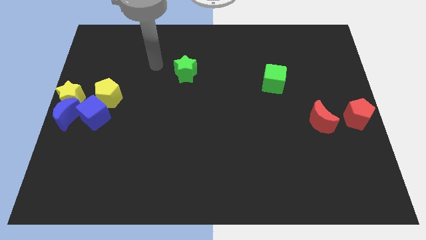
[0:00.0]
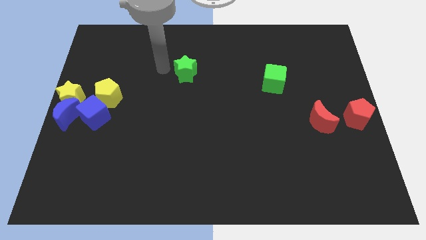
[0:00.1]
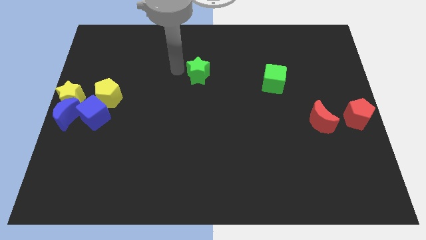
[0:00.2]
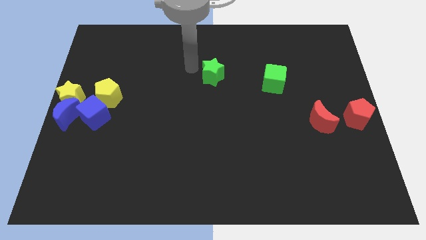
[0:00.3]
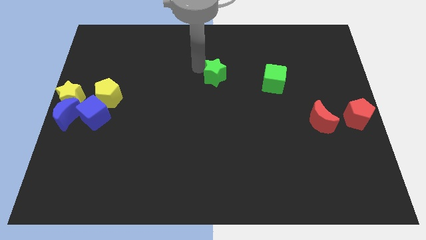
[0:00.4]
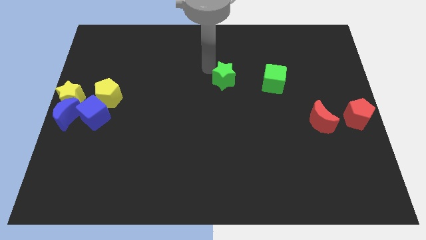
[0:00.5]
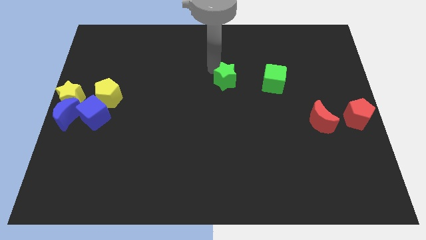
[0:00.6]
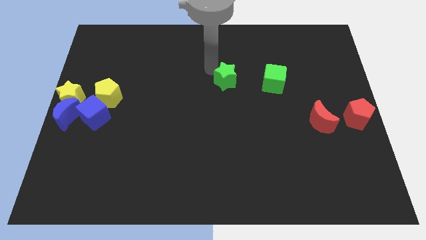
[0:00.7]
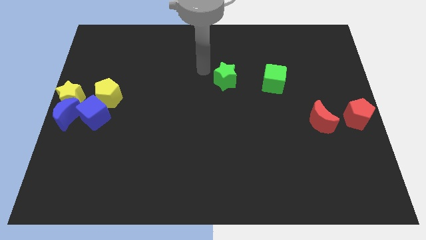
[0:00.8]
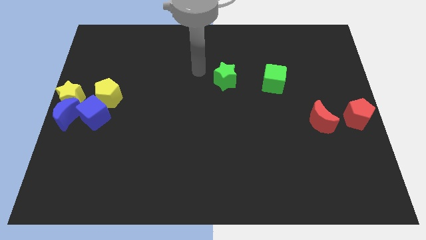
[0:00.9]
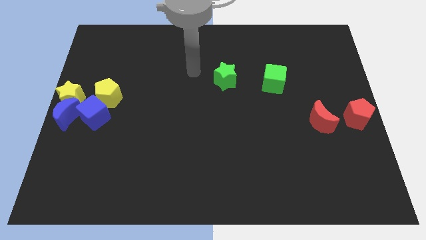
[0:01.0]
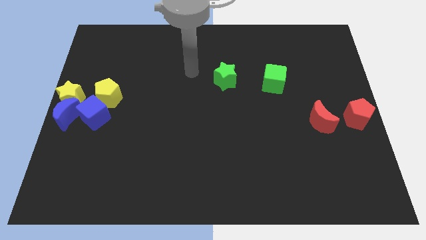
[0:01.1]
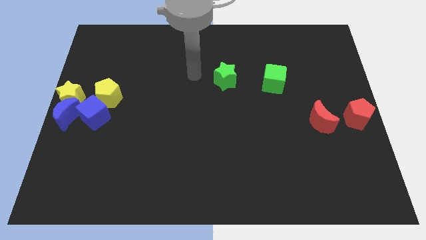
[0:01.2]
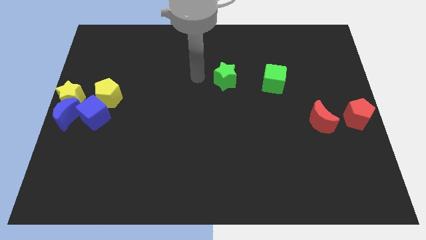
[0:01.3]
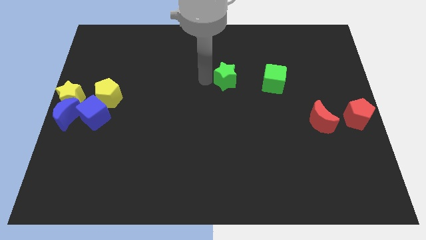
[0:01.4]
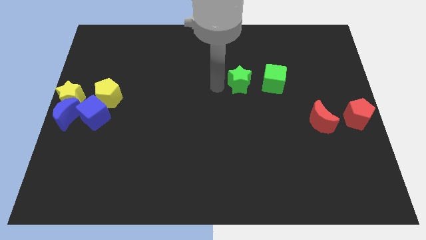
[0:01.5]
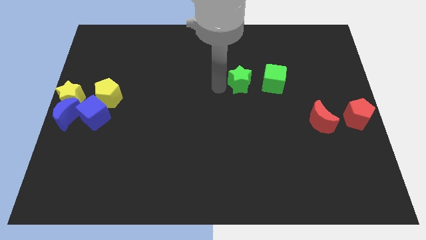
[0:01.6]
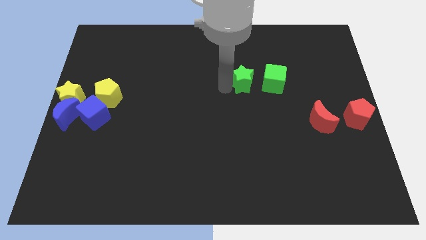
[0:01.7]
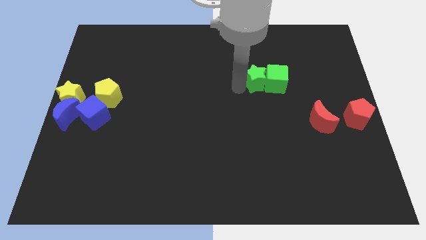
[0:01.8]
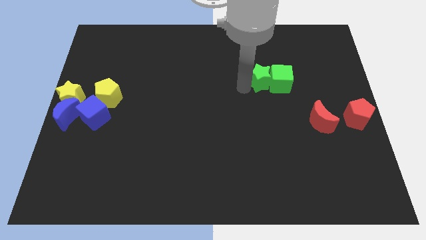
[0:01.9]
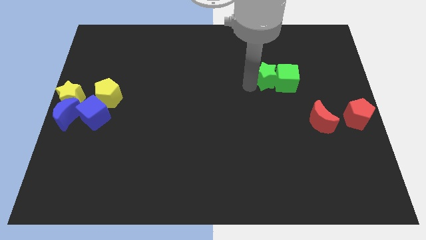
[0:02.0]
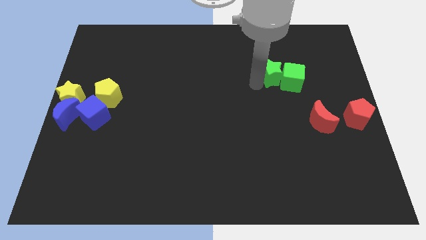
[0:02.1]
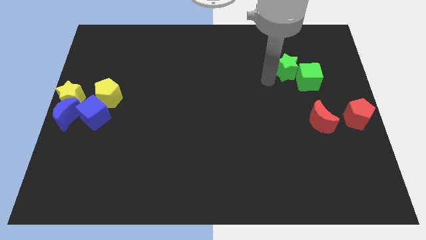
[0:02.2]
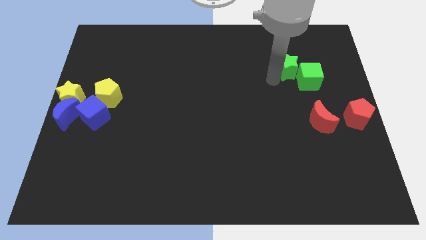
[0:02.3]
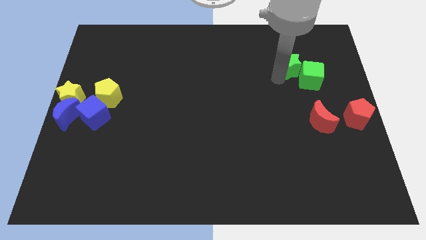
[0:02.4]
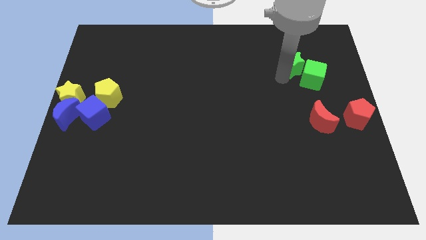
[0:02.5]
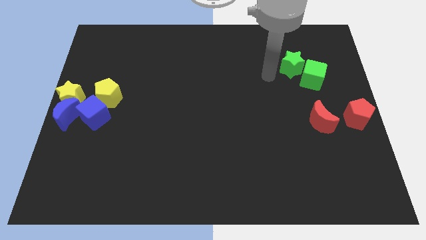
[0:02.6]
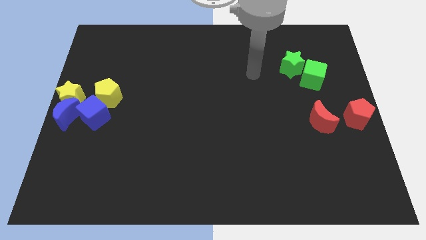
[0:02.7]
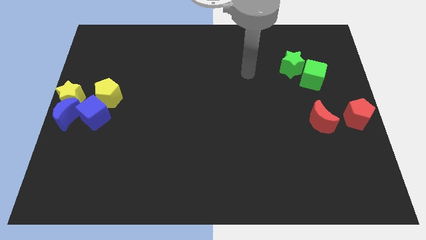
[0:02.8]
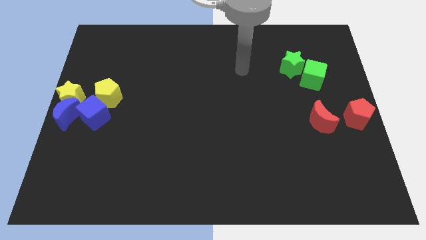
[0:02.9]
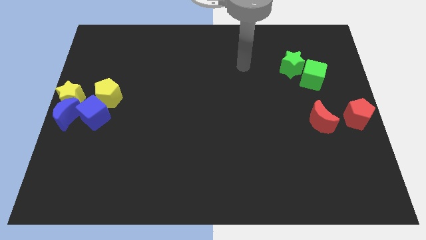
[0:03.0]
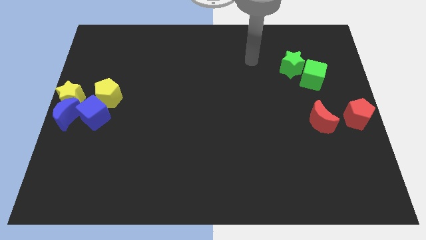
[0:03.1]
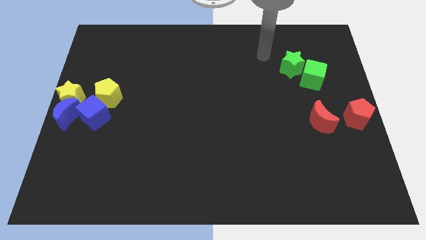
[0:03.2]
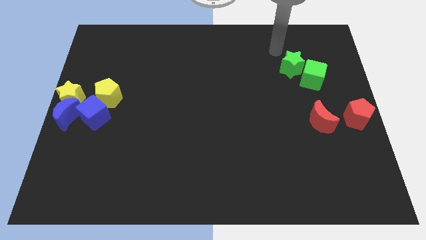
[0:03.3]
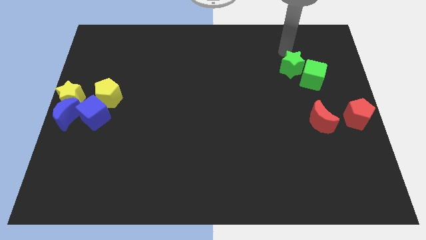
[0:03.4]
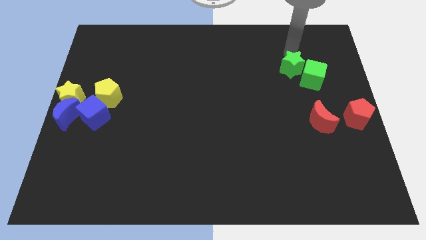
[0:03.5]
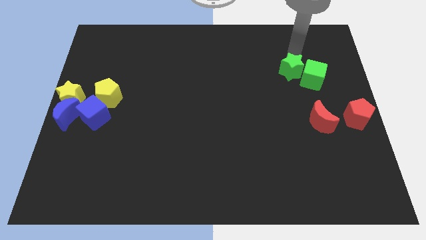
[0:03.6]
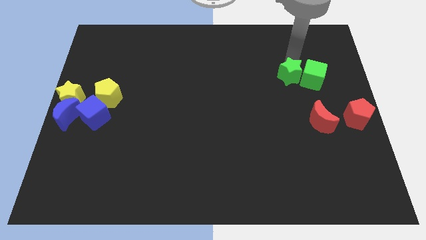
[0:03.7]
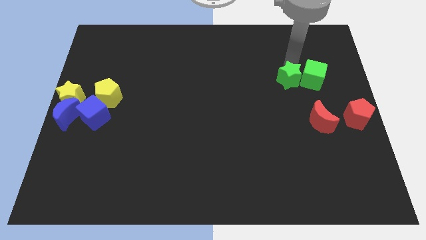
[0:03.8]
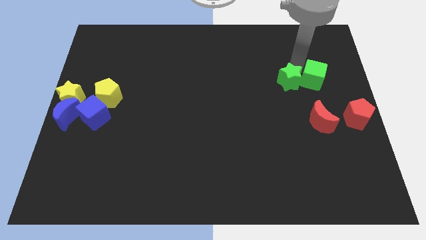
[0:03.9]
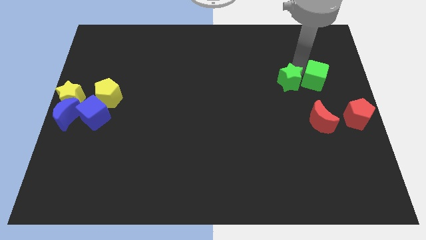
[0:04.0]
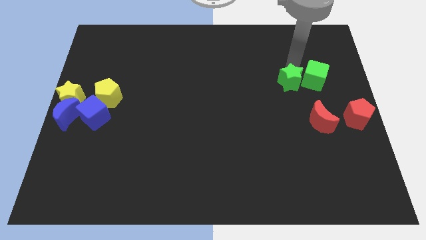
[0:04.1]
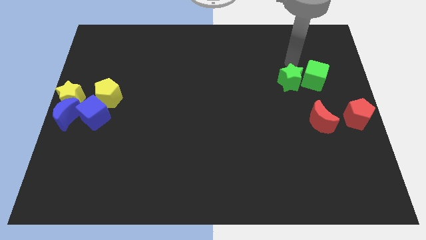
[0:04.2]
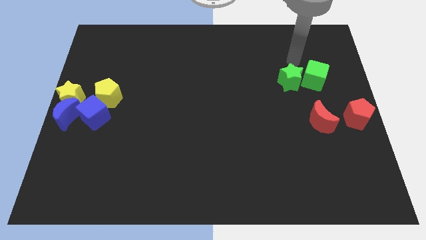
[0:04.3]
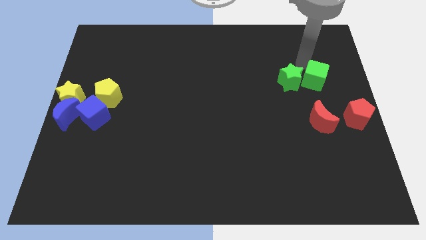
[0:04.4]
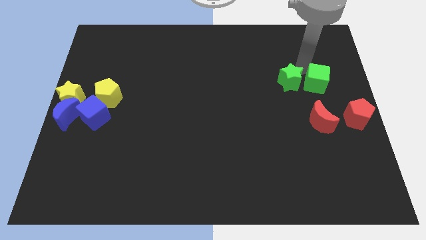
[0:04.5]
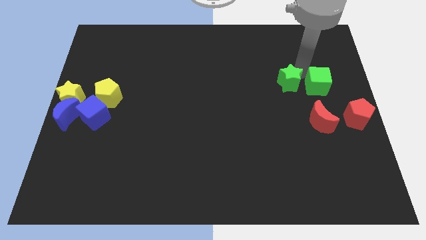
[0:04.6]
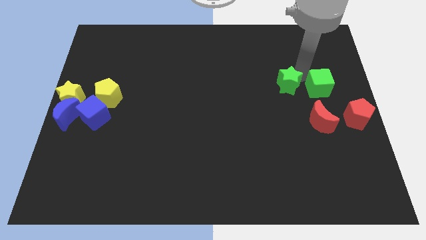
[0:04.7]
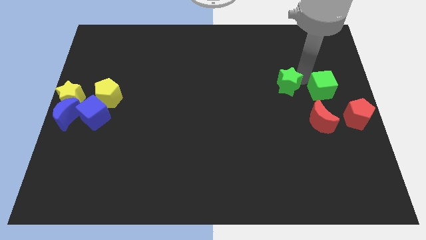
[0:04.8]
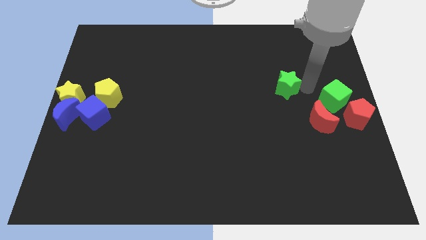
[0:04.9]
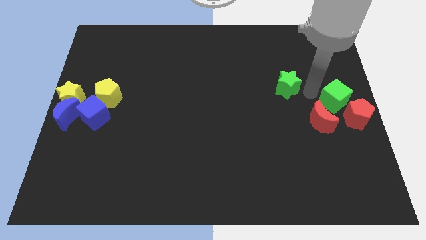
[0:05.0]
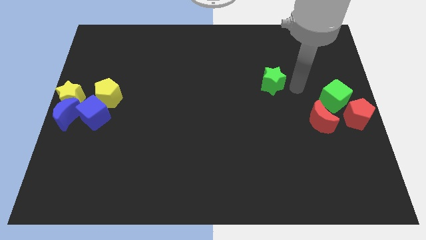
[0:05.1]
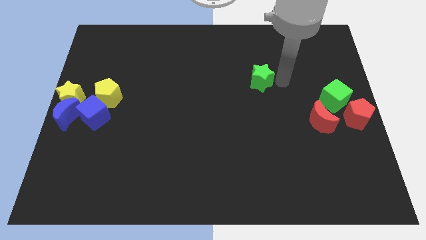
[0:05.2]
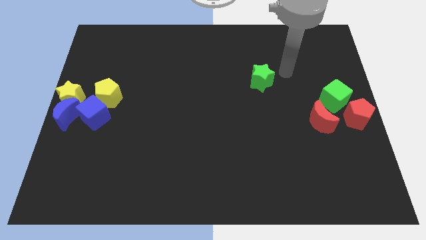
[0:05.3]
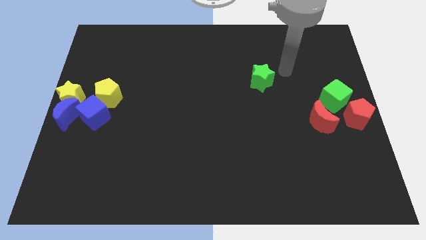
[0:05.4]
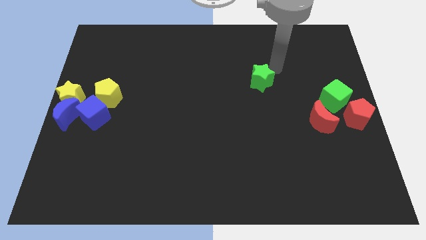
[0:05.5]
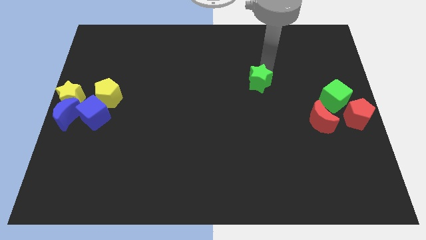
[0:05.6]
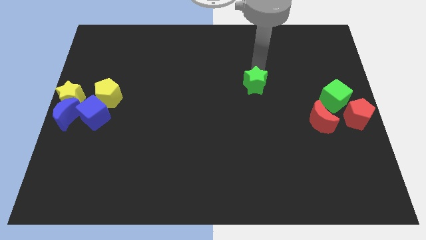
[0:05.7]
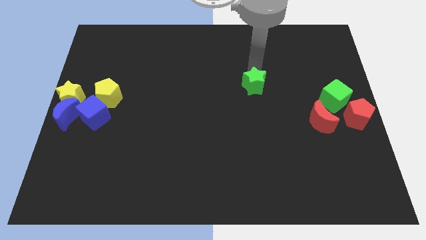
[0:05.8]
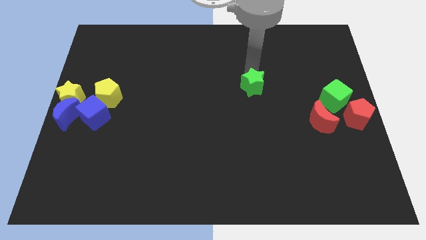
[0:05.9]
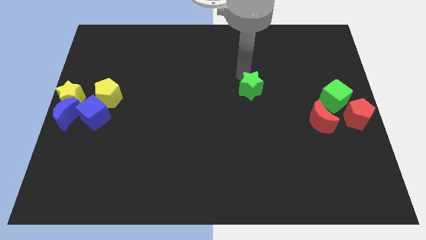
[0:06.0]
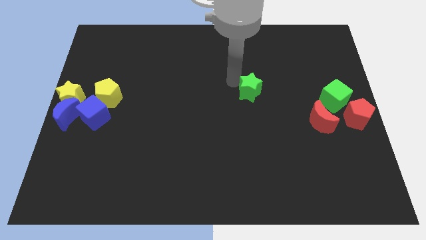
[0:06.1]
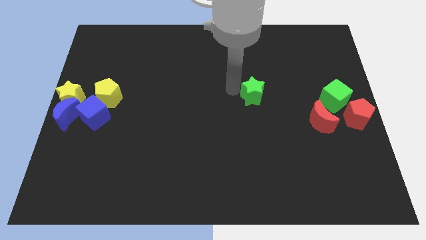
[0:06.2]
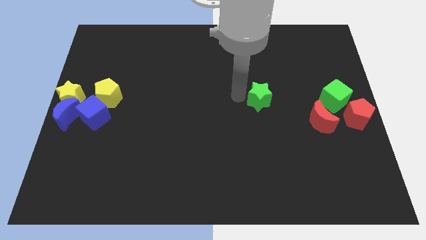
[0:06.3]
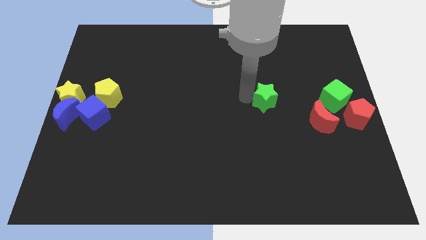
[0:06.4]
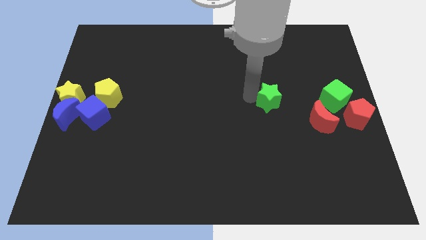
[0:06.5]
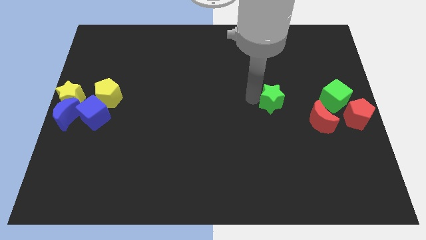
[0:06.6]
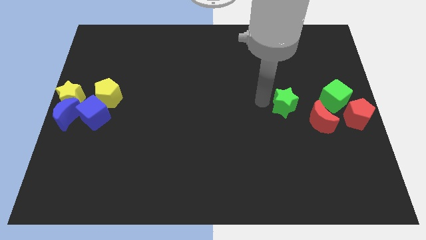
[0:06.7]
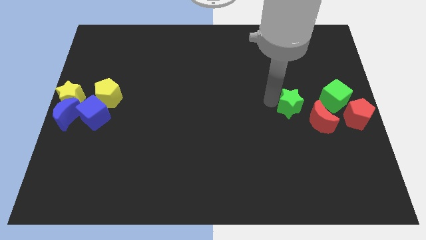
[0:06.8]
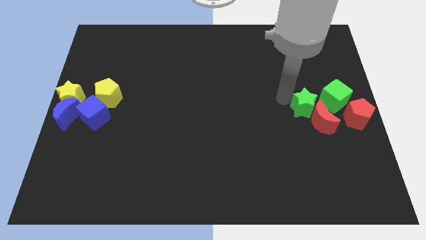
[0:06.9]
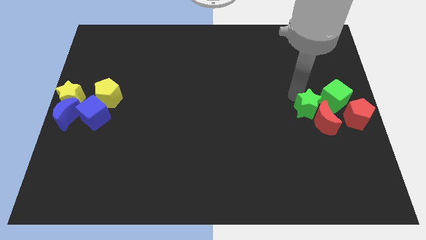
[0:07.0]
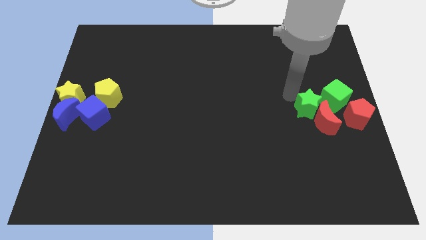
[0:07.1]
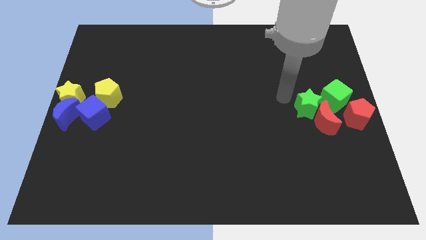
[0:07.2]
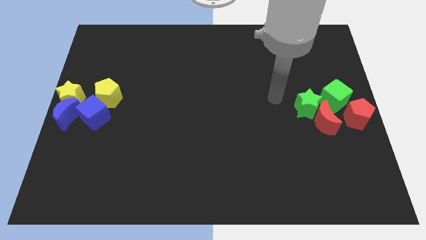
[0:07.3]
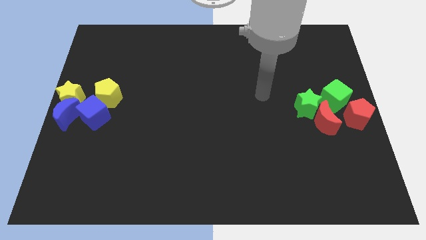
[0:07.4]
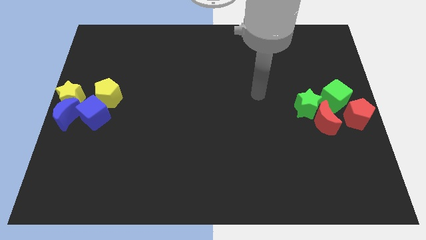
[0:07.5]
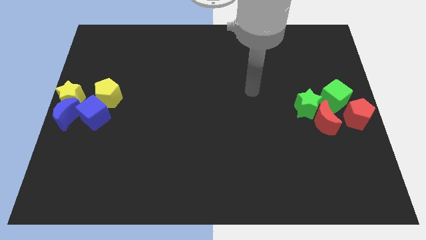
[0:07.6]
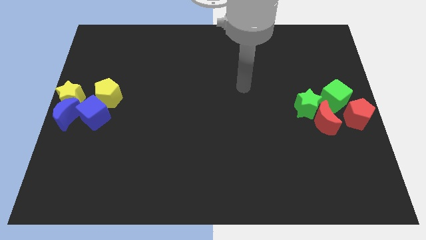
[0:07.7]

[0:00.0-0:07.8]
push the green star and green cube towards the right center of the board

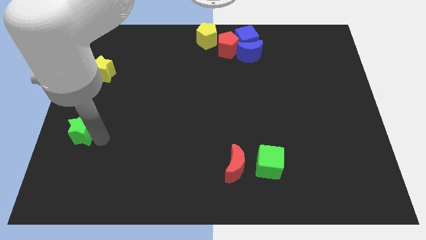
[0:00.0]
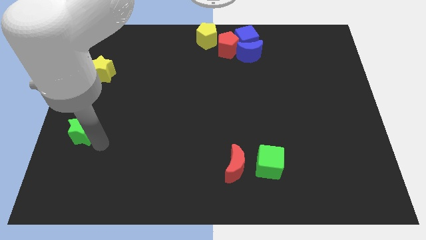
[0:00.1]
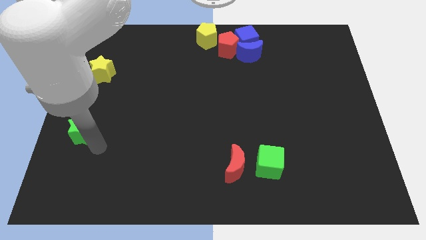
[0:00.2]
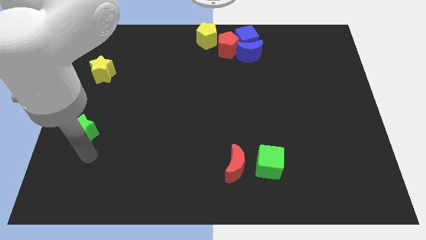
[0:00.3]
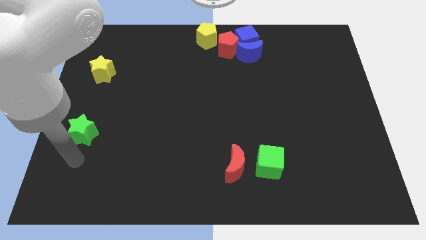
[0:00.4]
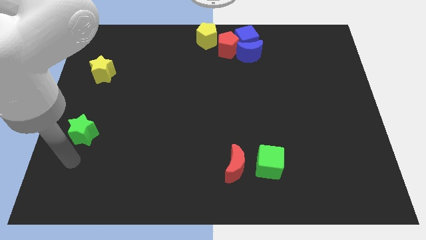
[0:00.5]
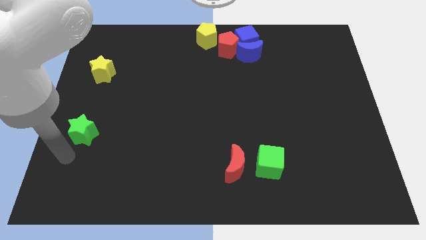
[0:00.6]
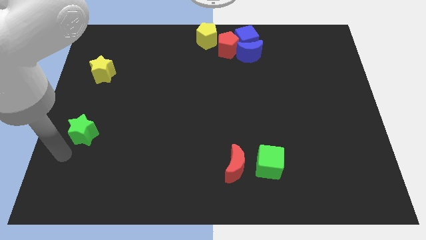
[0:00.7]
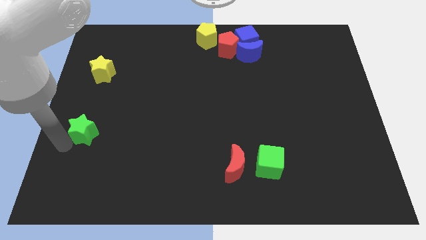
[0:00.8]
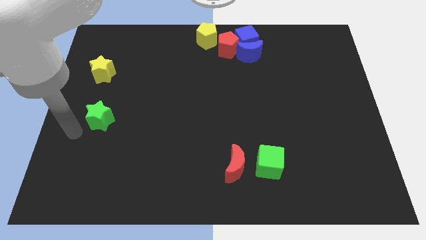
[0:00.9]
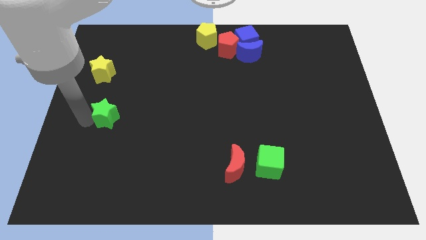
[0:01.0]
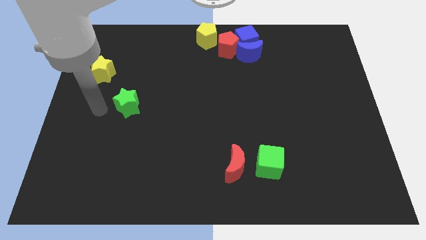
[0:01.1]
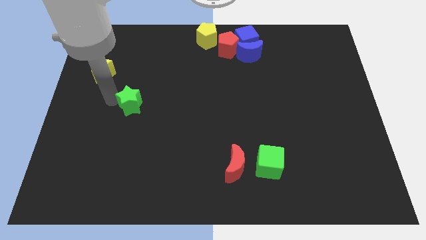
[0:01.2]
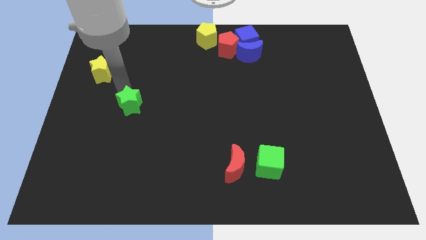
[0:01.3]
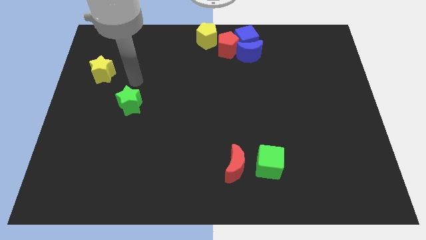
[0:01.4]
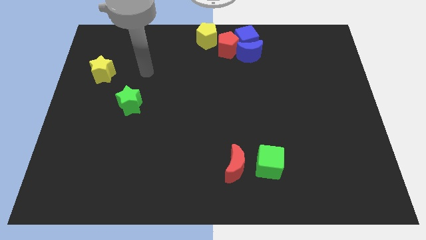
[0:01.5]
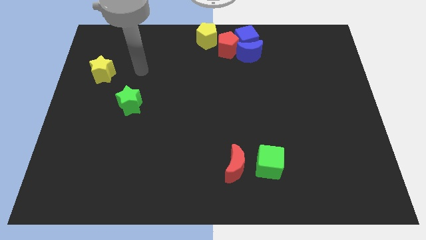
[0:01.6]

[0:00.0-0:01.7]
move the green star diagonal bottom right to yellow star
